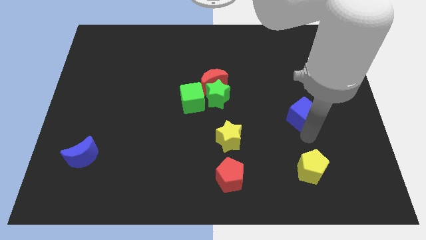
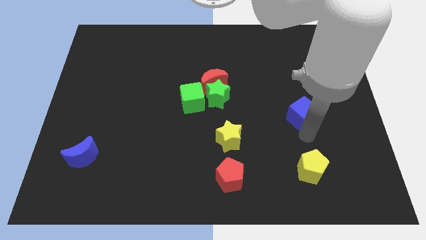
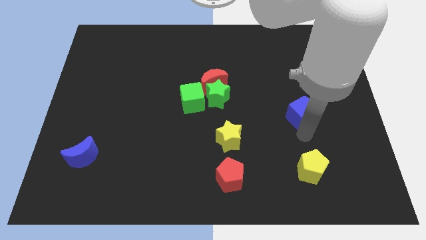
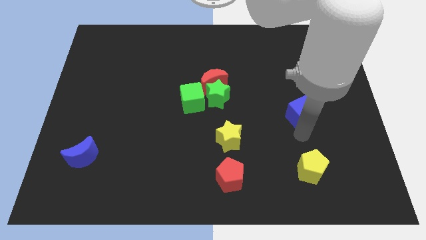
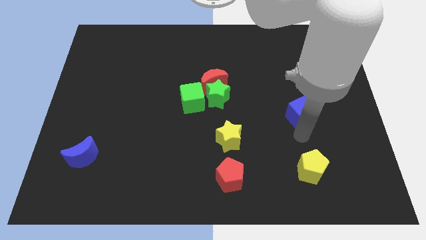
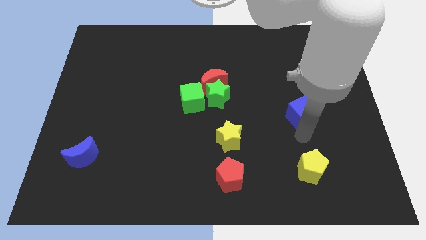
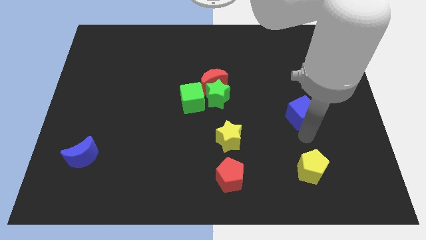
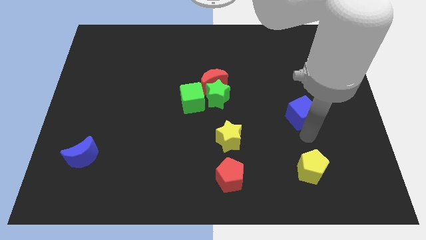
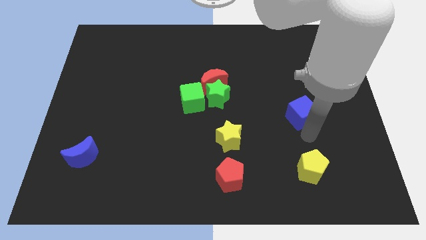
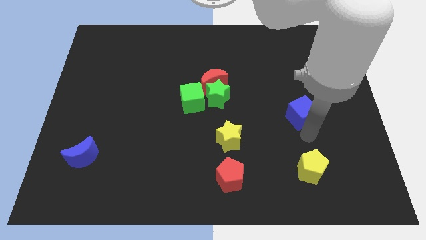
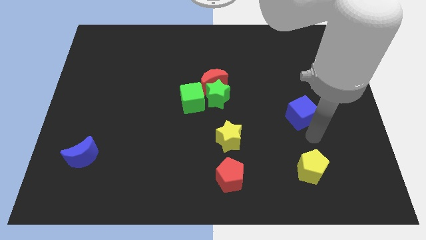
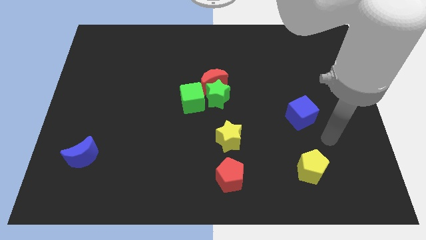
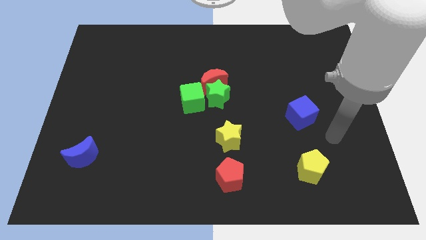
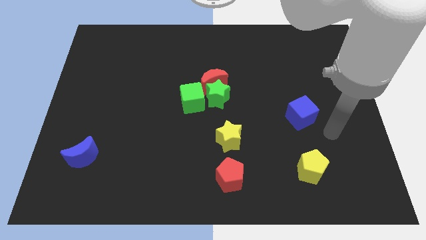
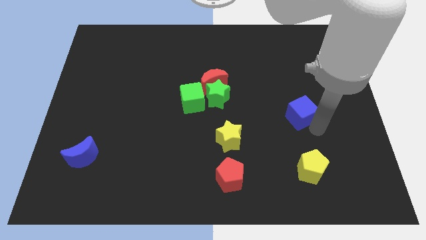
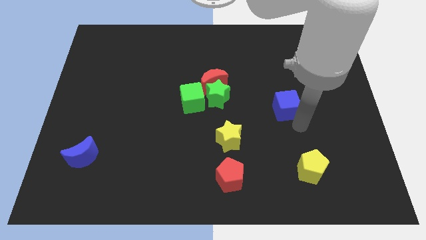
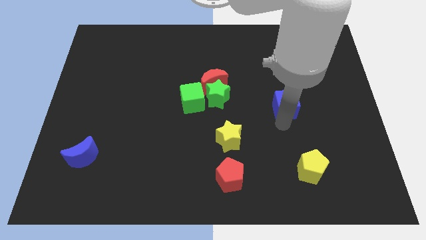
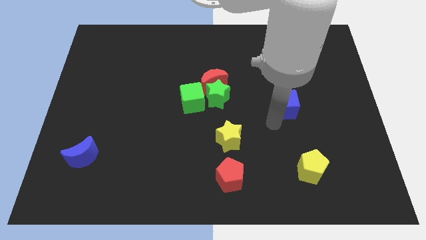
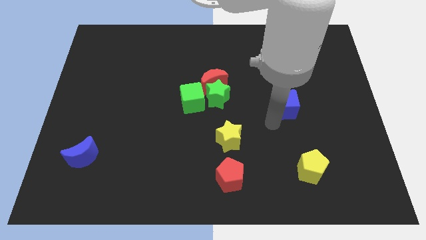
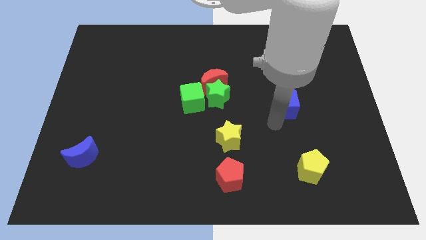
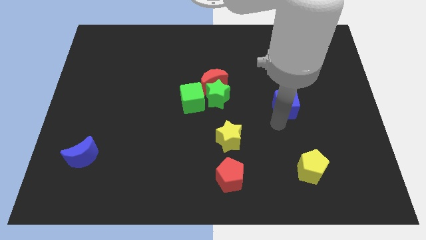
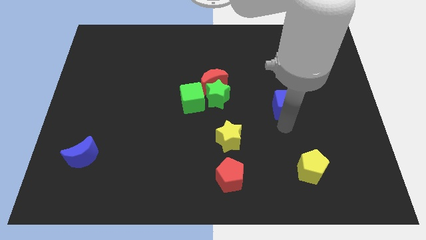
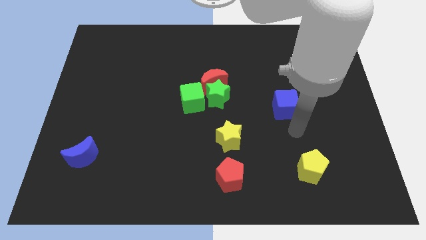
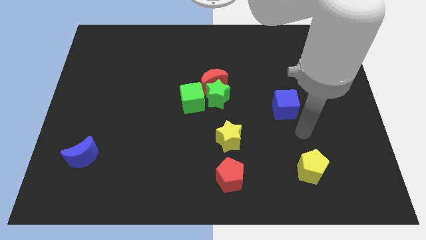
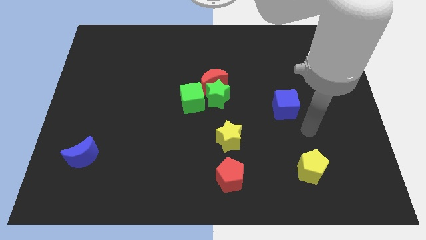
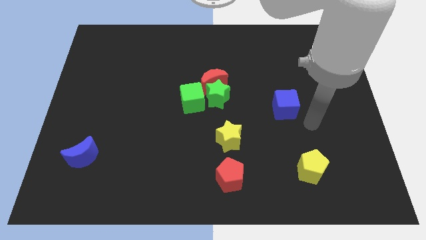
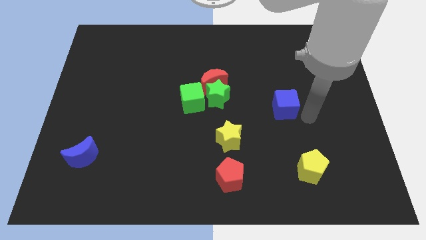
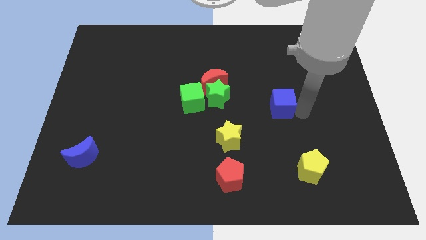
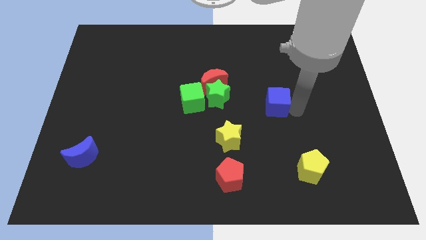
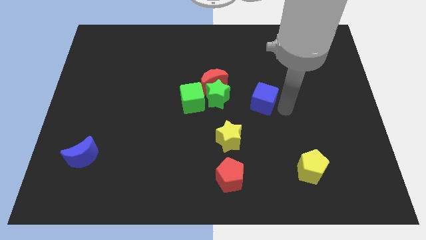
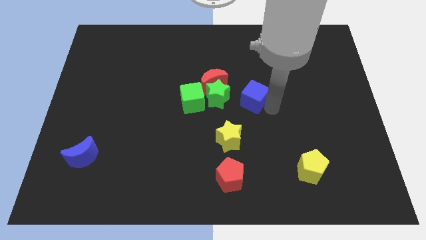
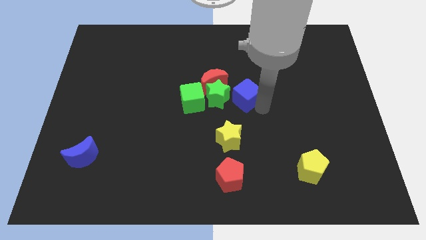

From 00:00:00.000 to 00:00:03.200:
place the blue cube right to the green star

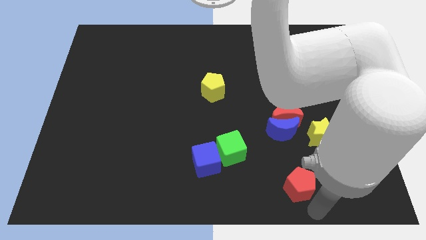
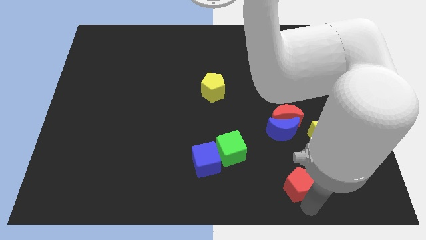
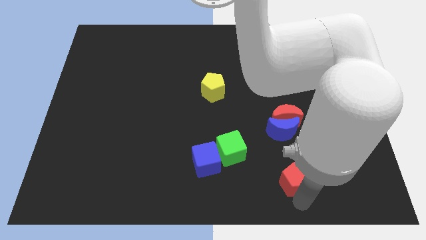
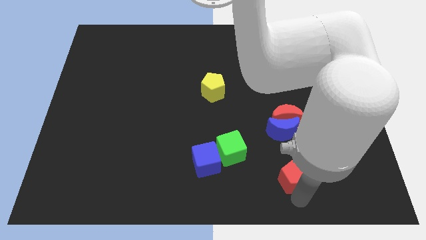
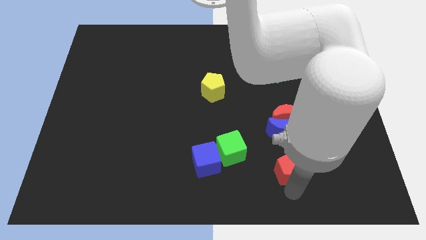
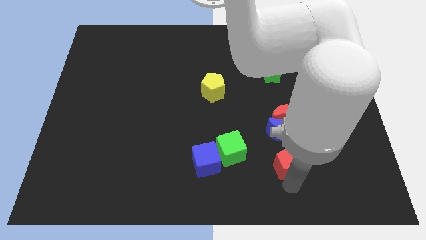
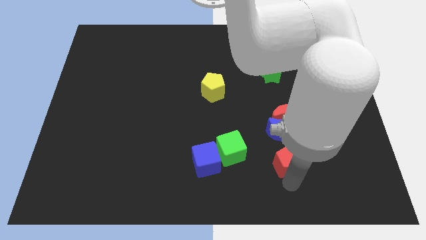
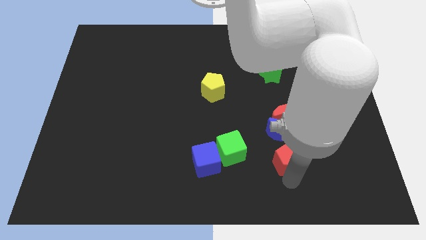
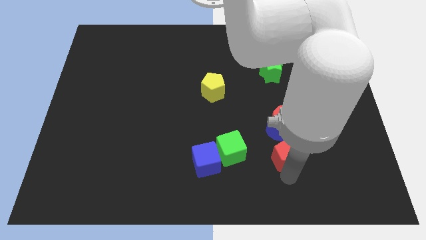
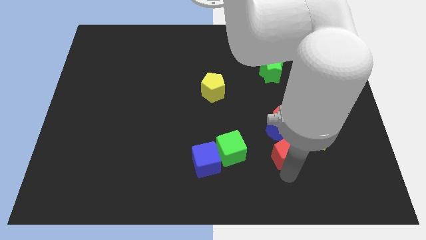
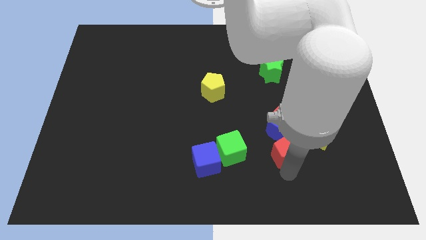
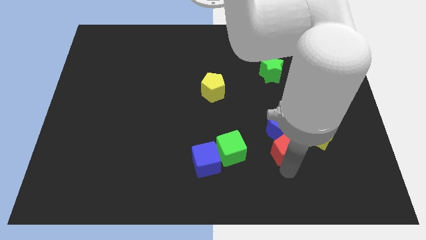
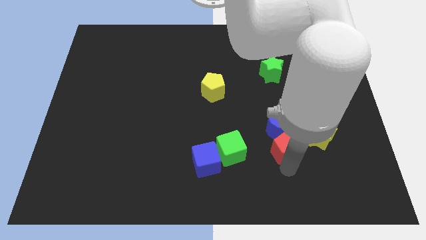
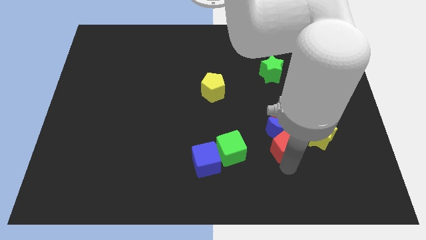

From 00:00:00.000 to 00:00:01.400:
move the red pentagon to the top of the board

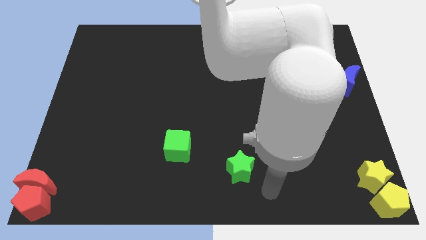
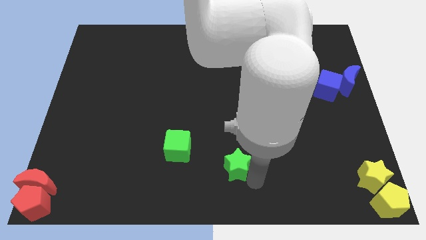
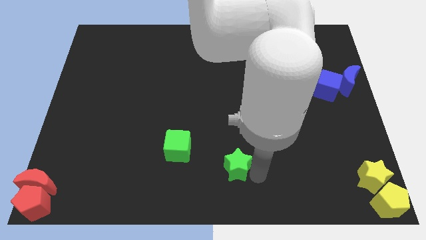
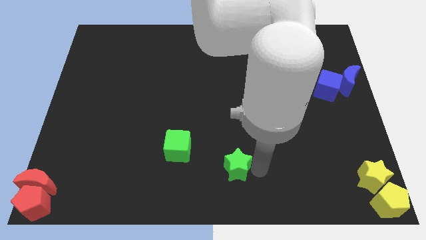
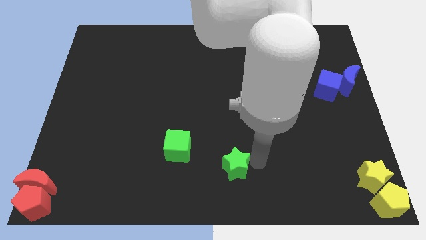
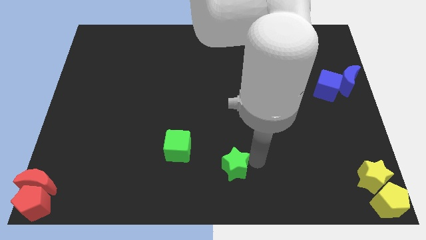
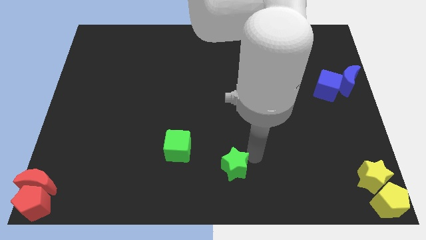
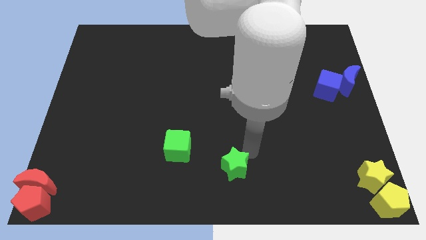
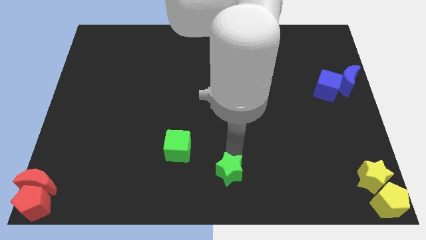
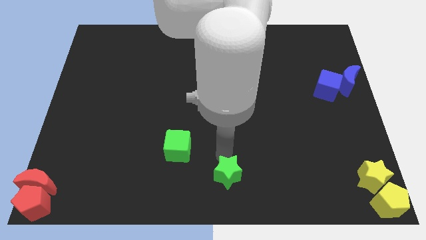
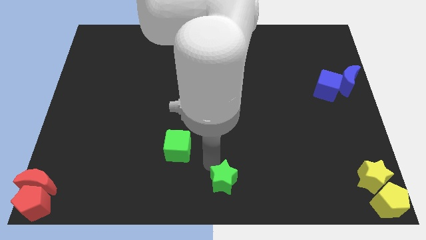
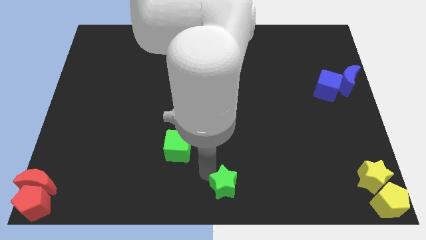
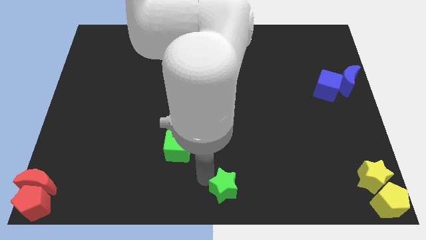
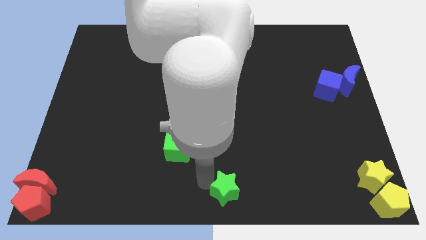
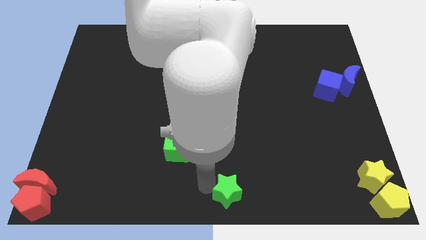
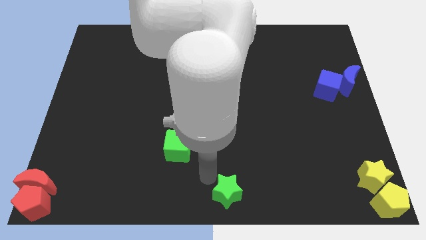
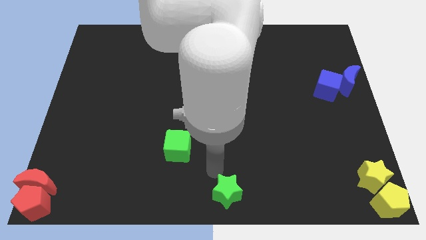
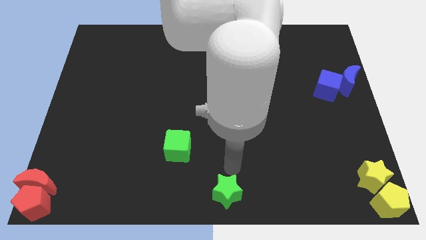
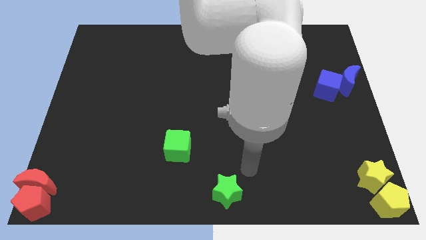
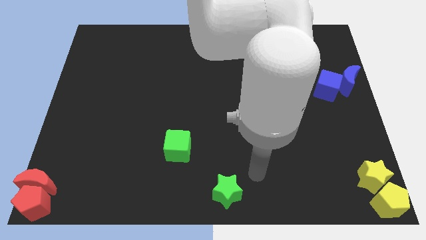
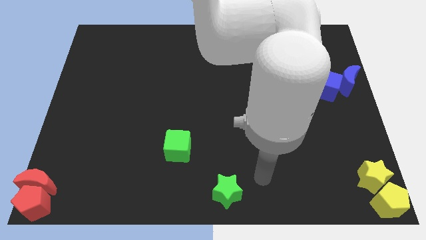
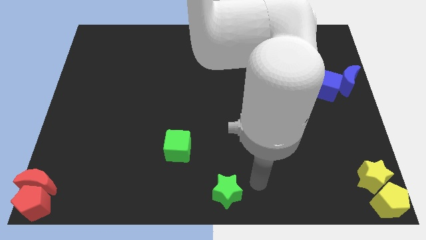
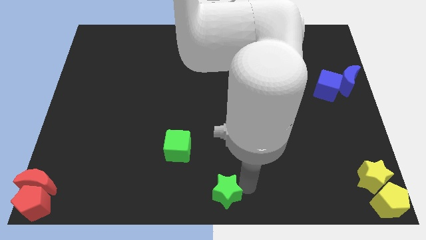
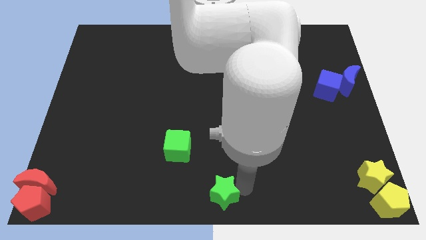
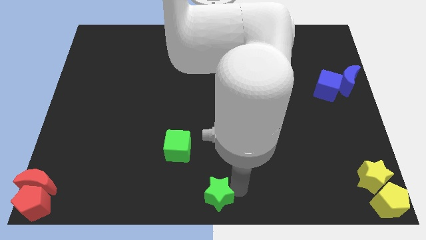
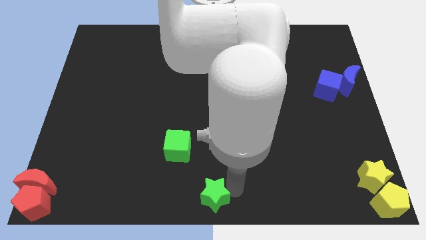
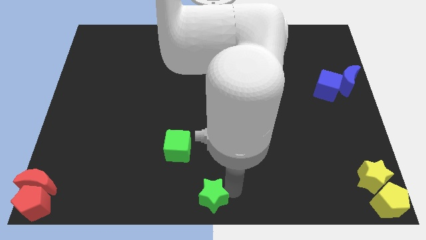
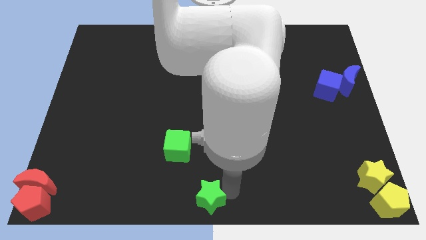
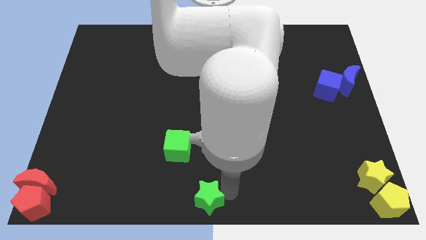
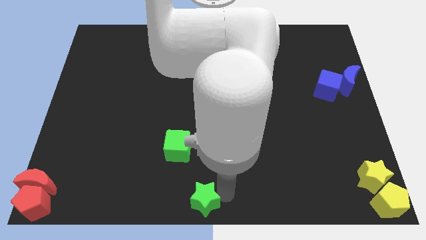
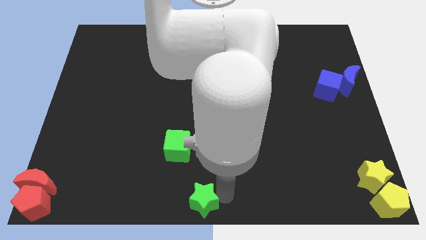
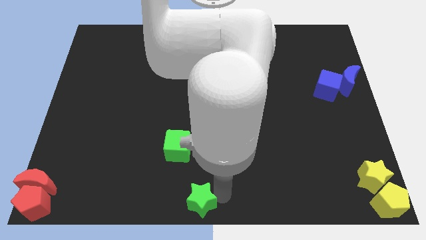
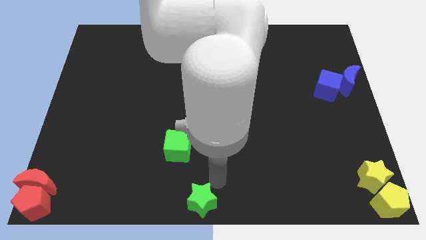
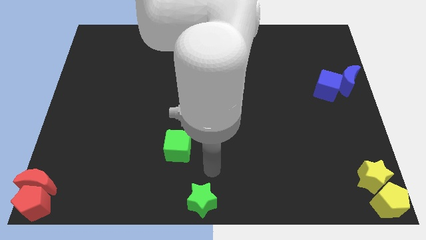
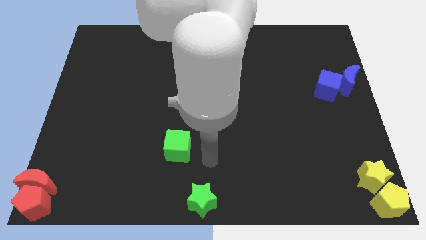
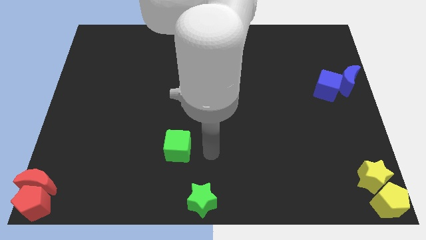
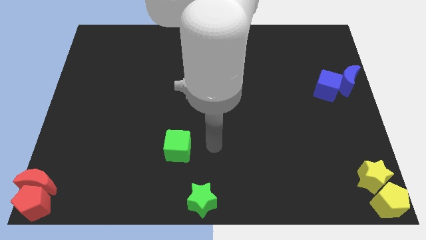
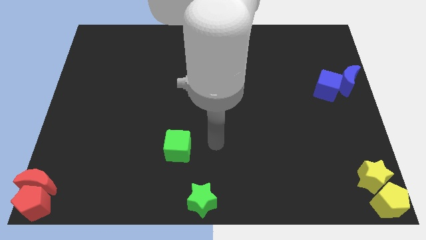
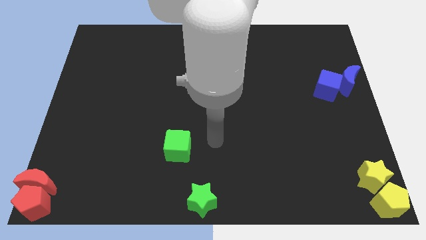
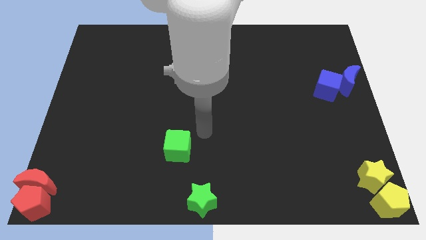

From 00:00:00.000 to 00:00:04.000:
push the green star towards the bottom center of the board

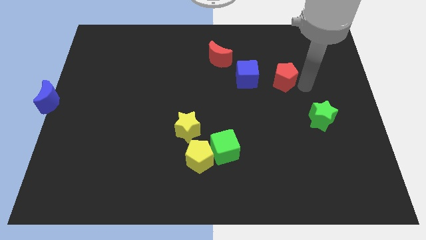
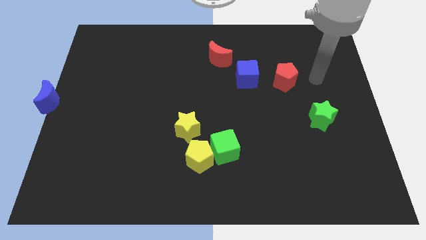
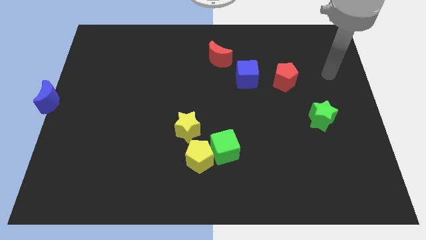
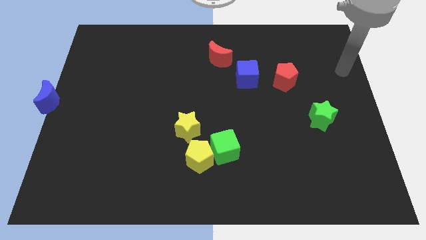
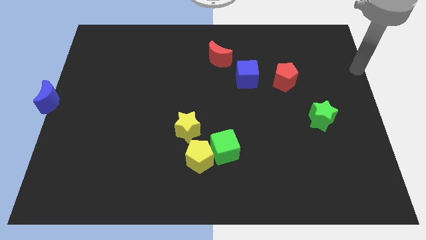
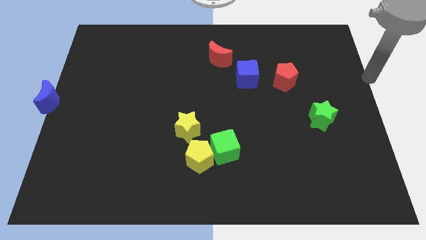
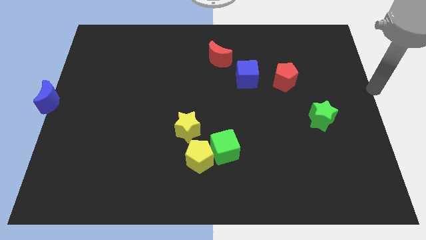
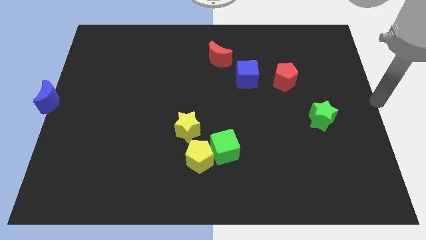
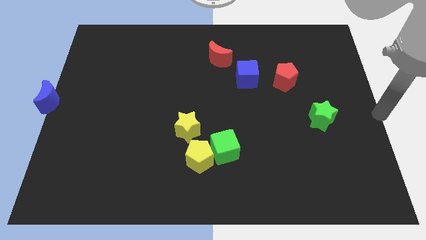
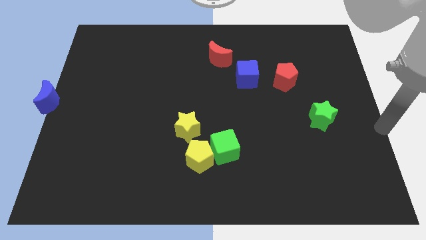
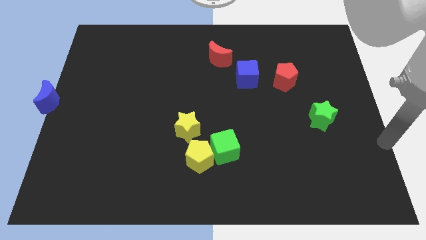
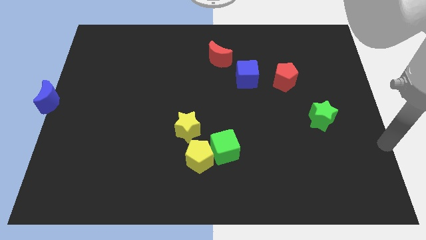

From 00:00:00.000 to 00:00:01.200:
move your arm from the blocks
